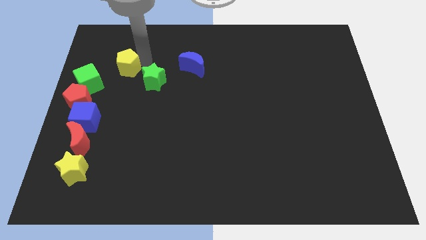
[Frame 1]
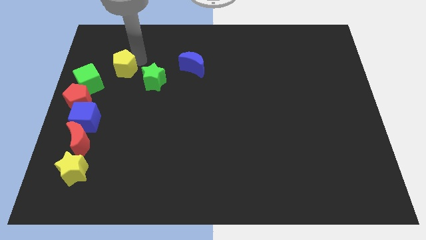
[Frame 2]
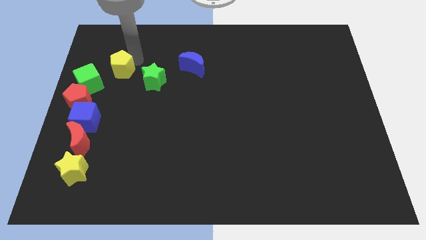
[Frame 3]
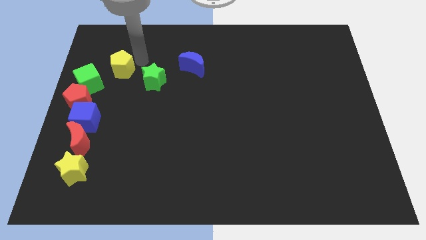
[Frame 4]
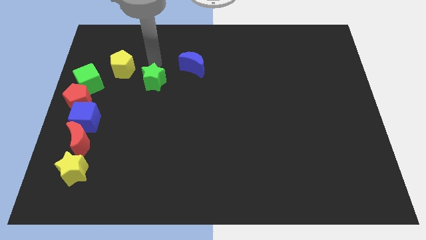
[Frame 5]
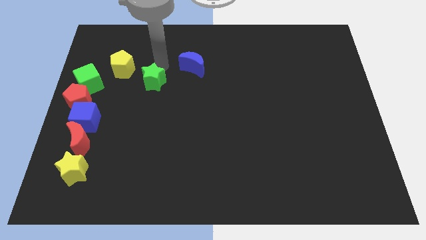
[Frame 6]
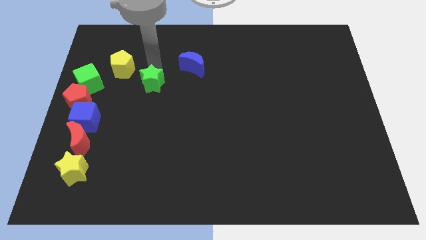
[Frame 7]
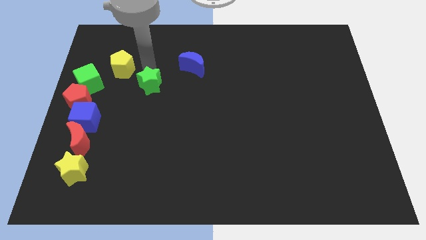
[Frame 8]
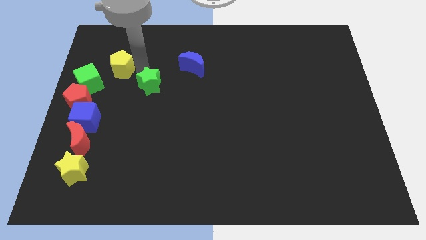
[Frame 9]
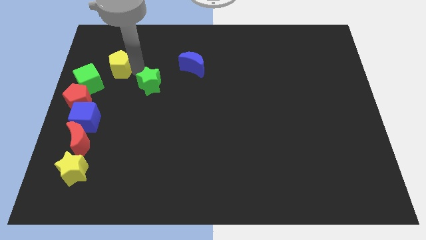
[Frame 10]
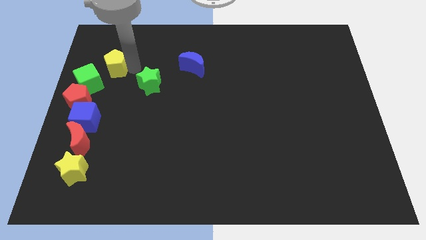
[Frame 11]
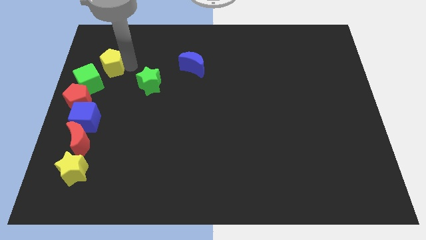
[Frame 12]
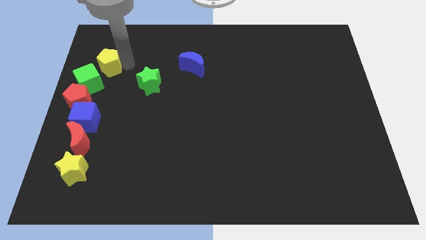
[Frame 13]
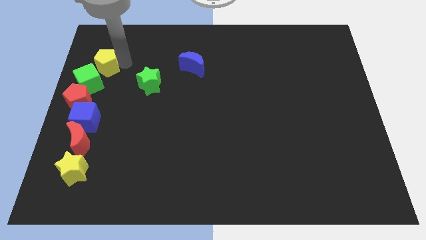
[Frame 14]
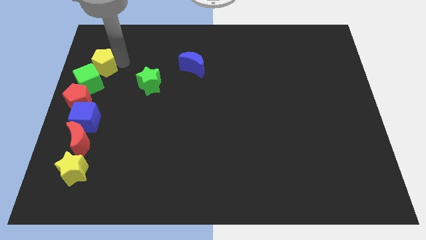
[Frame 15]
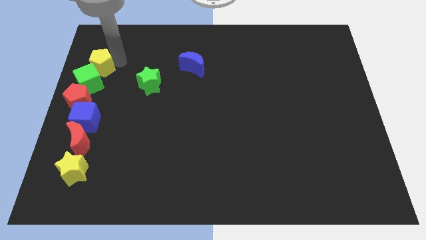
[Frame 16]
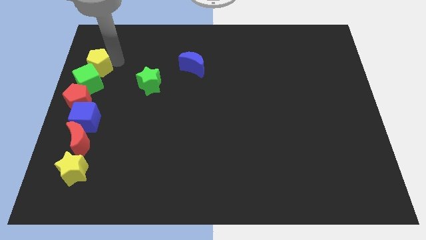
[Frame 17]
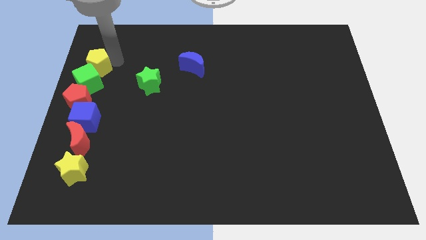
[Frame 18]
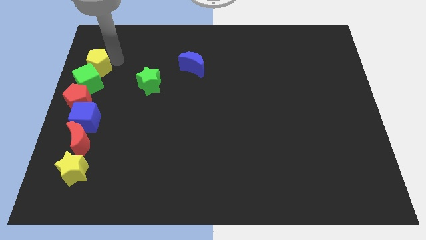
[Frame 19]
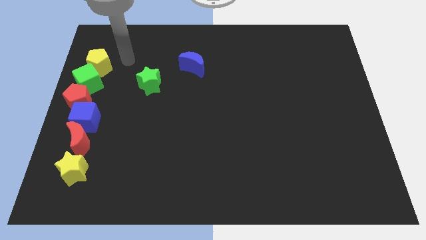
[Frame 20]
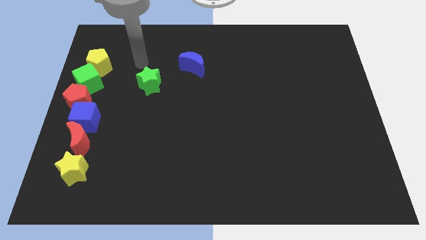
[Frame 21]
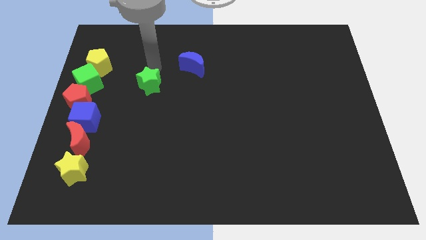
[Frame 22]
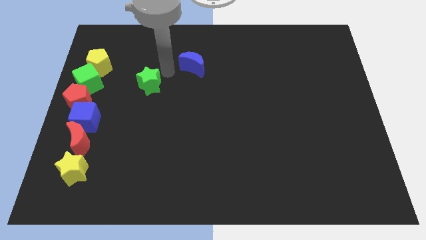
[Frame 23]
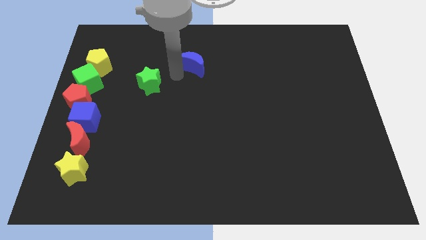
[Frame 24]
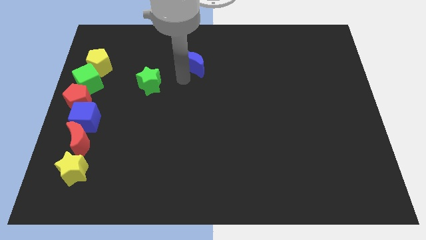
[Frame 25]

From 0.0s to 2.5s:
push the yellow pentagon into green cube

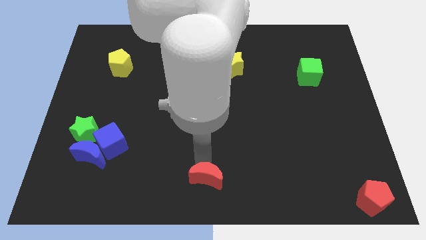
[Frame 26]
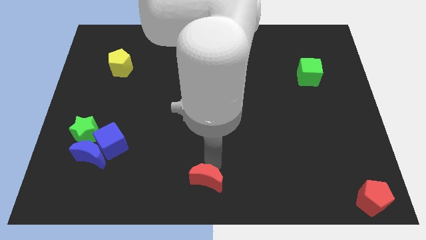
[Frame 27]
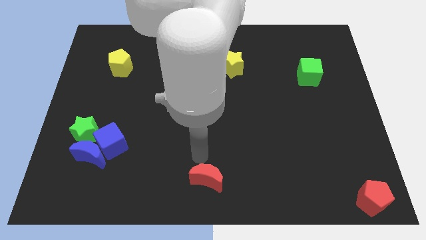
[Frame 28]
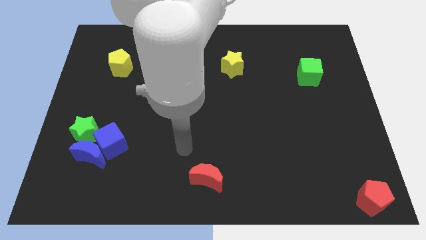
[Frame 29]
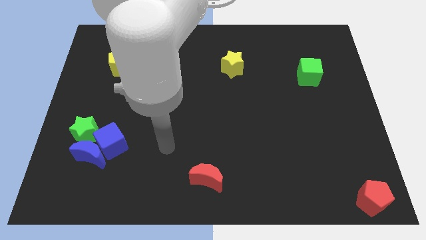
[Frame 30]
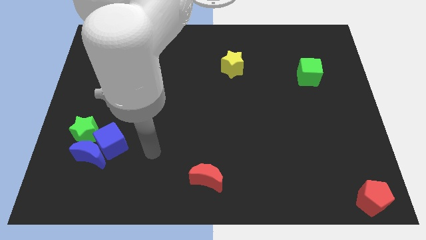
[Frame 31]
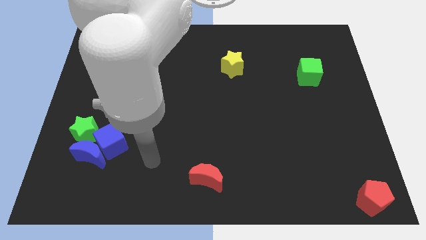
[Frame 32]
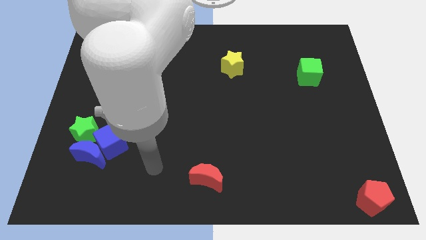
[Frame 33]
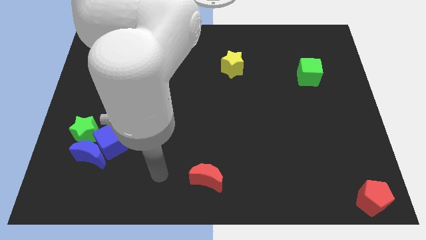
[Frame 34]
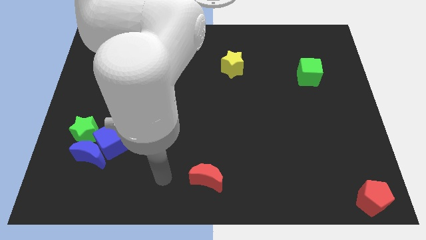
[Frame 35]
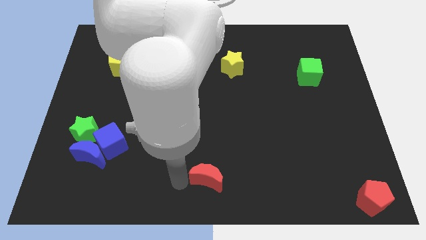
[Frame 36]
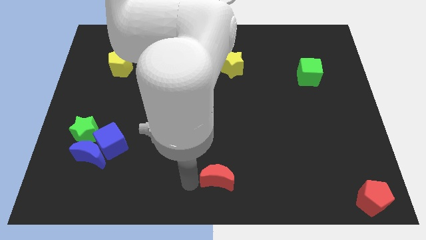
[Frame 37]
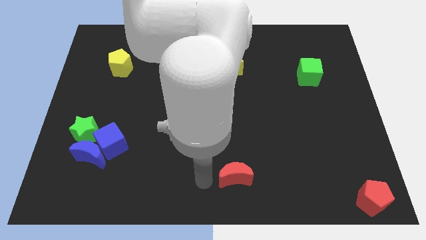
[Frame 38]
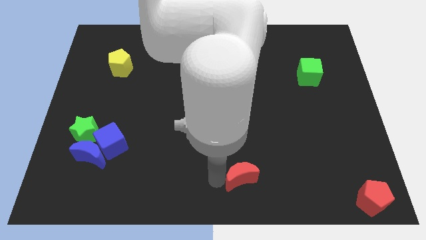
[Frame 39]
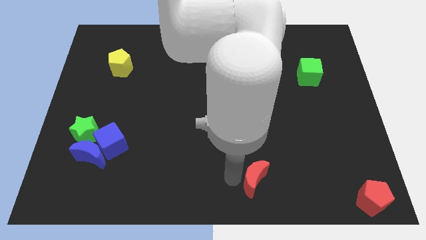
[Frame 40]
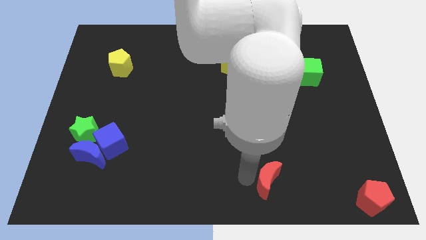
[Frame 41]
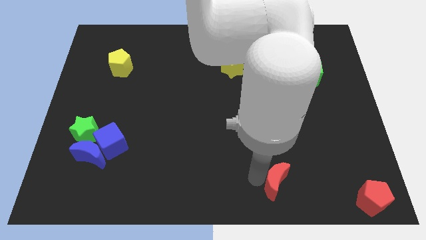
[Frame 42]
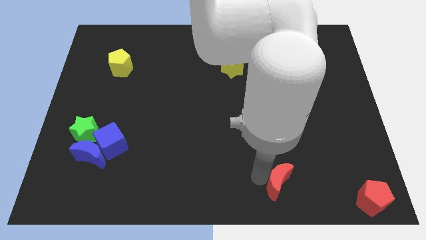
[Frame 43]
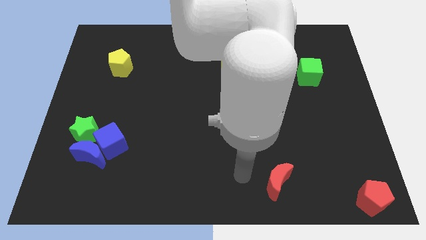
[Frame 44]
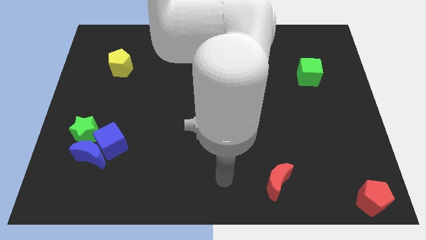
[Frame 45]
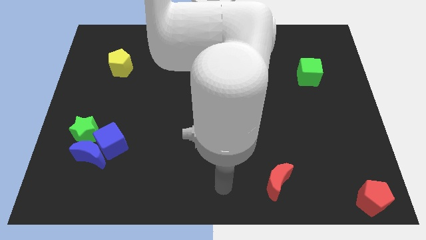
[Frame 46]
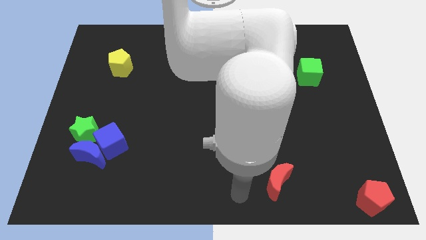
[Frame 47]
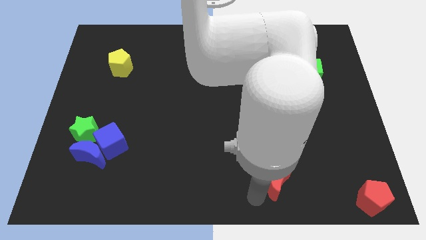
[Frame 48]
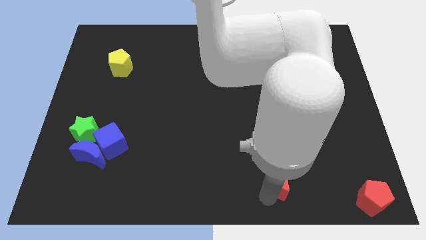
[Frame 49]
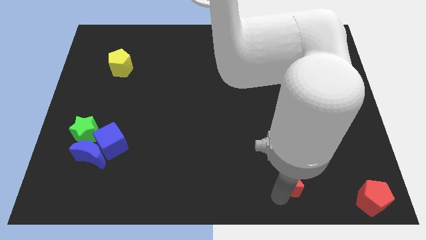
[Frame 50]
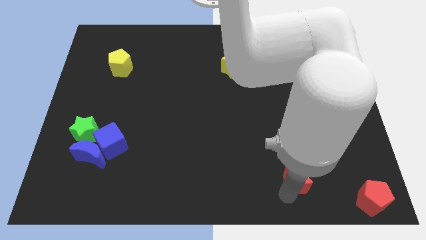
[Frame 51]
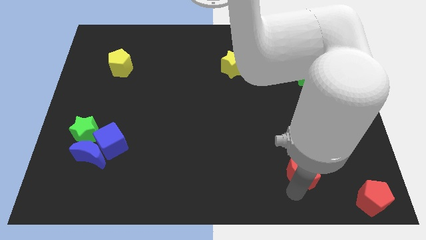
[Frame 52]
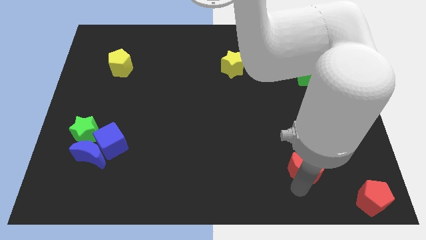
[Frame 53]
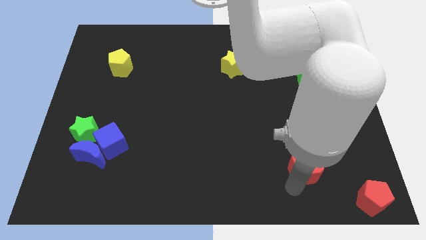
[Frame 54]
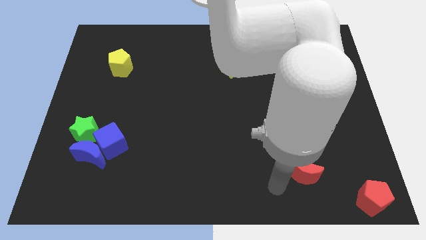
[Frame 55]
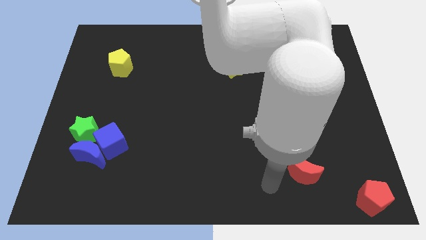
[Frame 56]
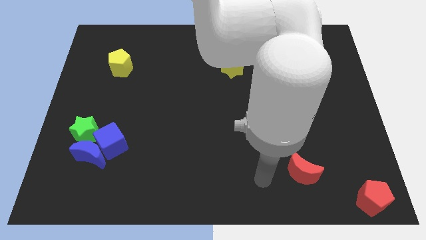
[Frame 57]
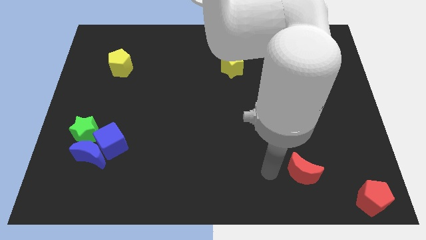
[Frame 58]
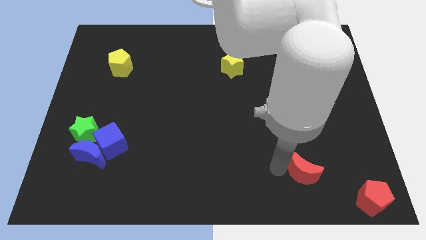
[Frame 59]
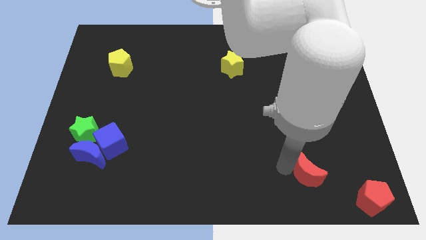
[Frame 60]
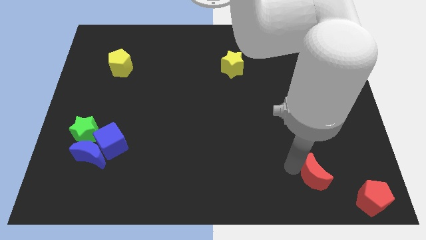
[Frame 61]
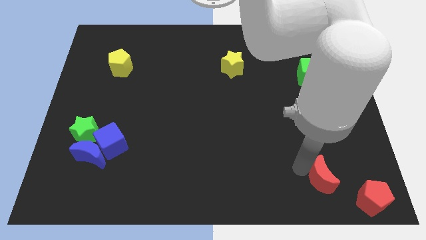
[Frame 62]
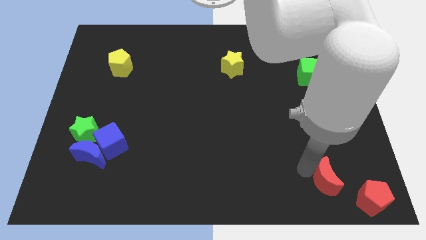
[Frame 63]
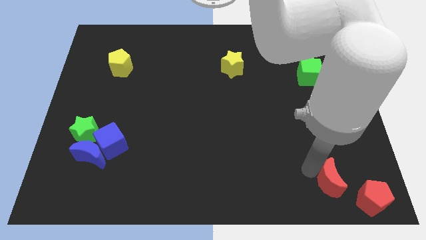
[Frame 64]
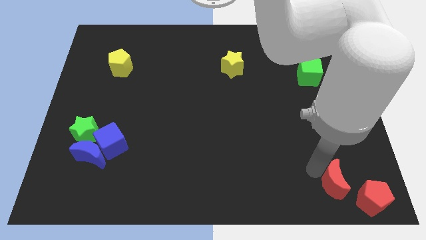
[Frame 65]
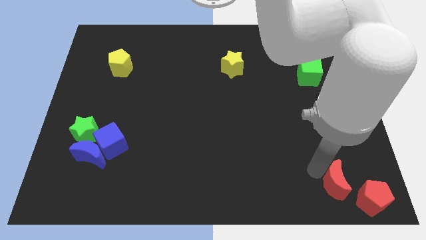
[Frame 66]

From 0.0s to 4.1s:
slide red moon towards red pentagon

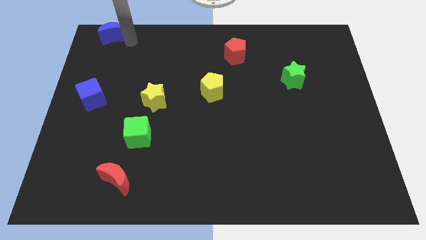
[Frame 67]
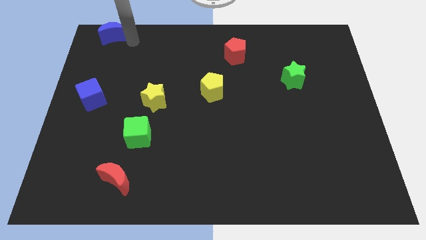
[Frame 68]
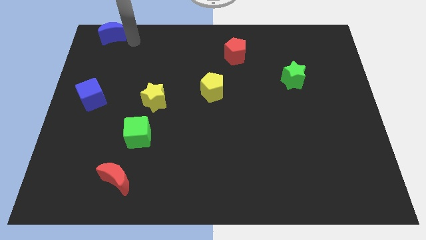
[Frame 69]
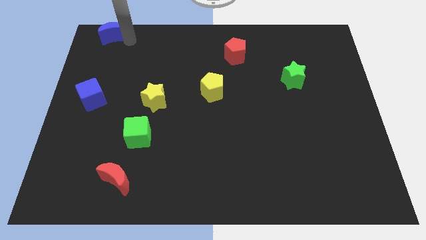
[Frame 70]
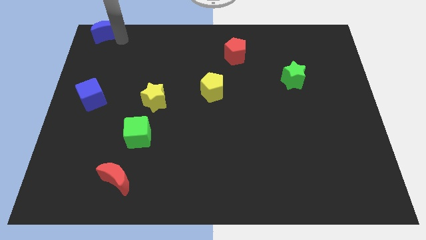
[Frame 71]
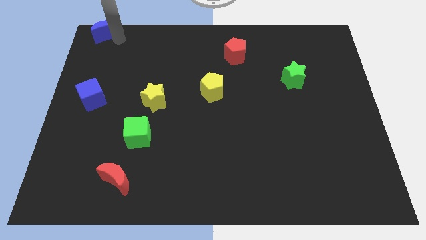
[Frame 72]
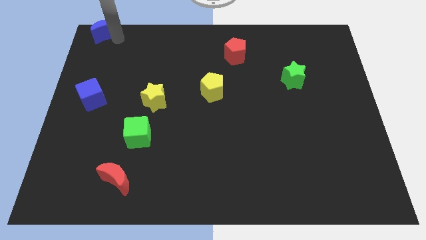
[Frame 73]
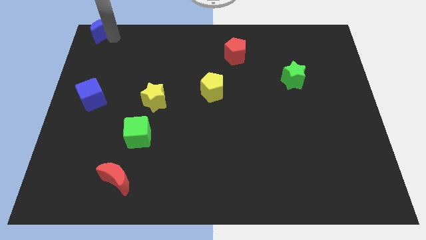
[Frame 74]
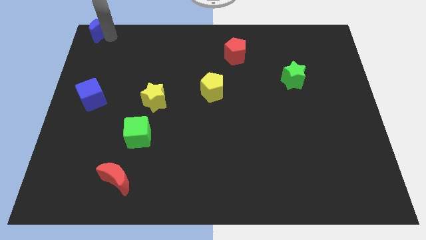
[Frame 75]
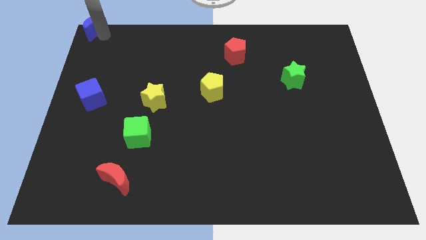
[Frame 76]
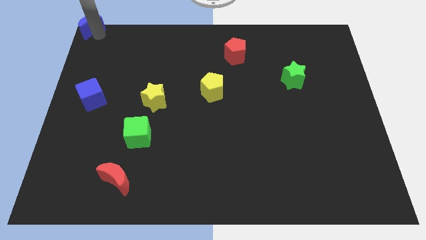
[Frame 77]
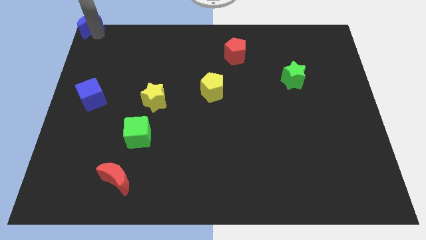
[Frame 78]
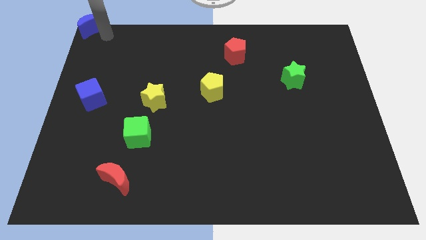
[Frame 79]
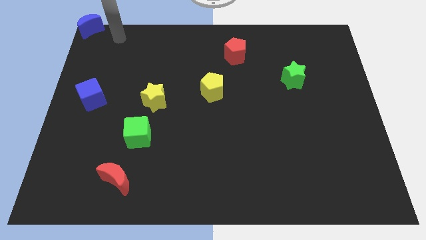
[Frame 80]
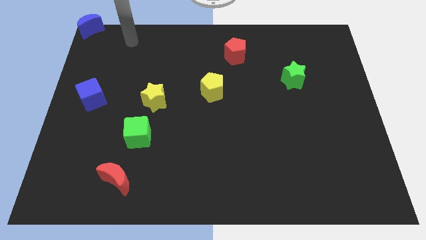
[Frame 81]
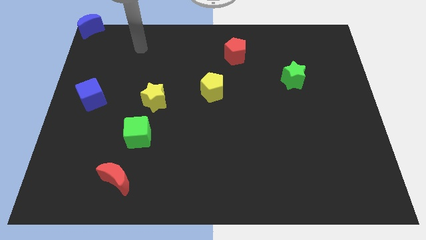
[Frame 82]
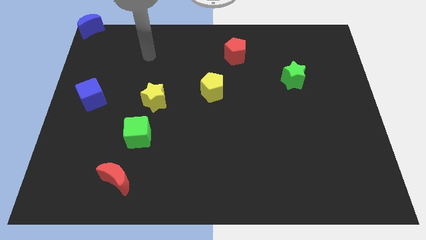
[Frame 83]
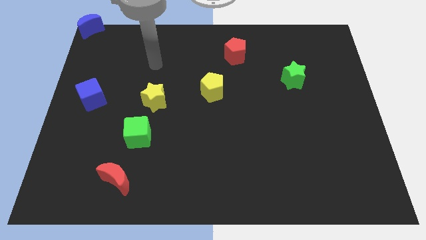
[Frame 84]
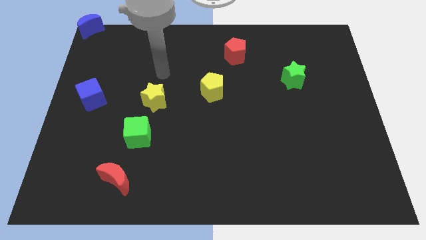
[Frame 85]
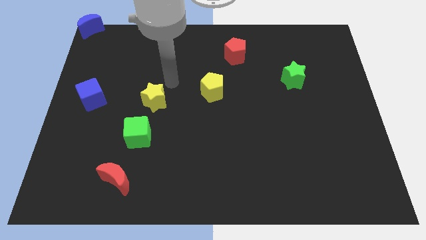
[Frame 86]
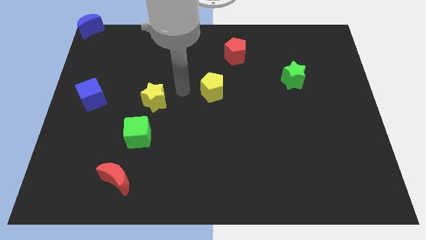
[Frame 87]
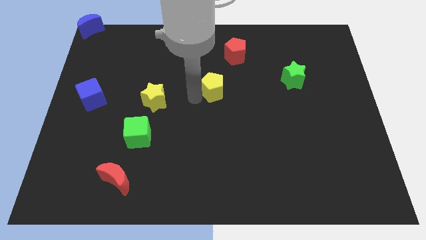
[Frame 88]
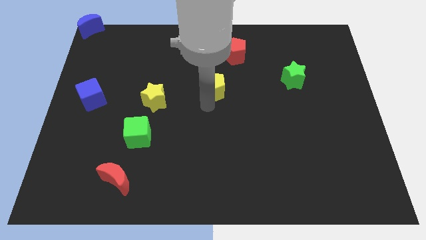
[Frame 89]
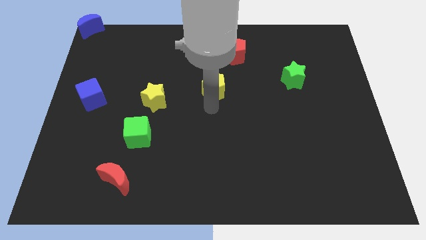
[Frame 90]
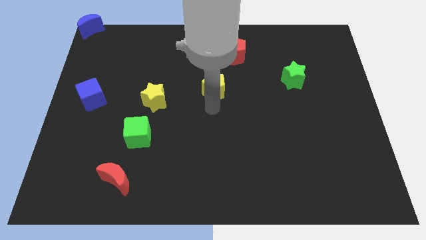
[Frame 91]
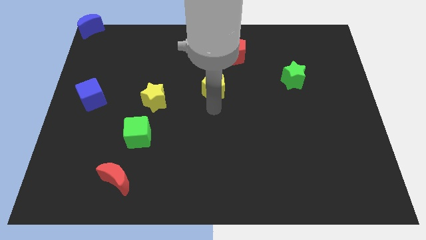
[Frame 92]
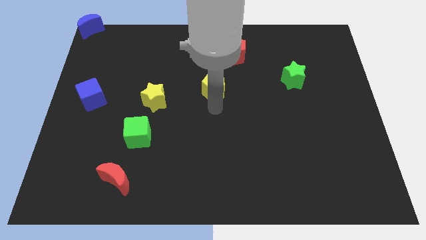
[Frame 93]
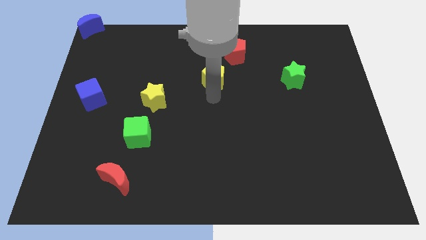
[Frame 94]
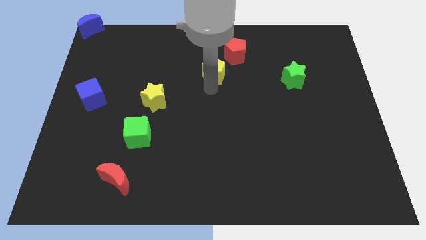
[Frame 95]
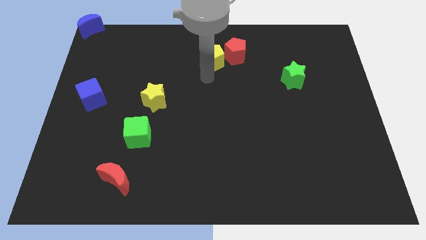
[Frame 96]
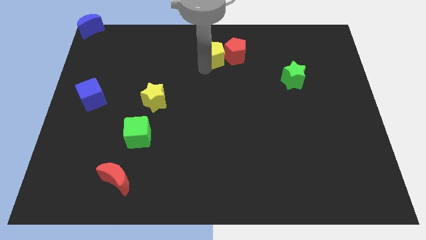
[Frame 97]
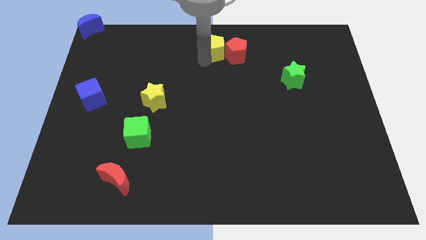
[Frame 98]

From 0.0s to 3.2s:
push yellow pentagon beside red pentagon
